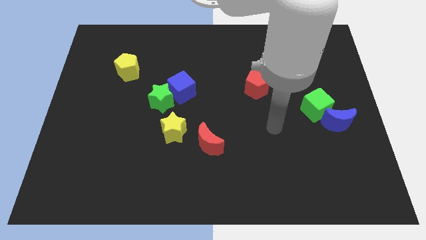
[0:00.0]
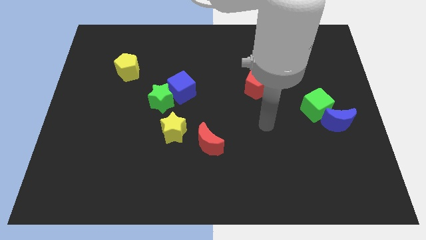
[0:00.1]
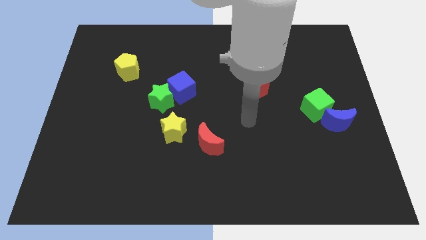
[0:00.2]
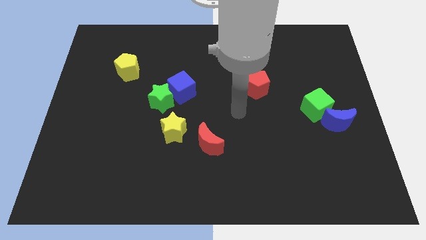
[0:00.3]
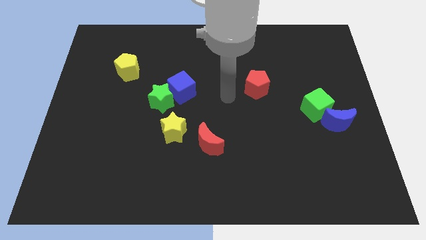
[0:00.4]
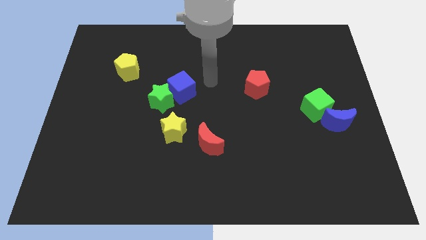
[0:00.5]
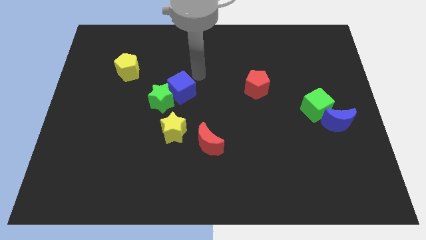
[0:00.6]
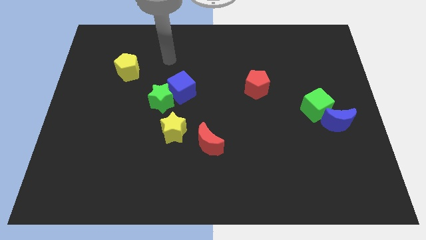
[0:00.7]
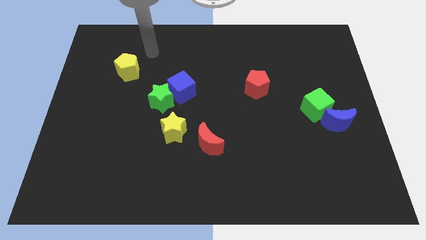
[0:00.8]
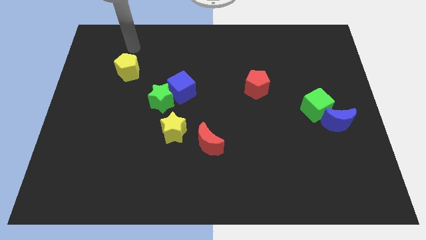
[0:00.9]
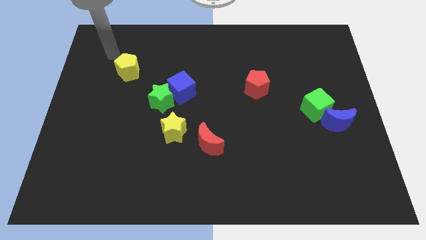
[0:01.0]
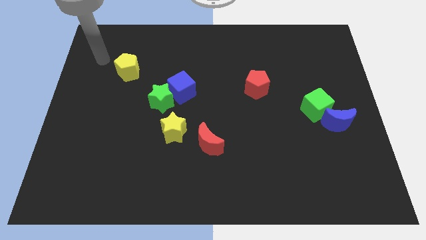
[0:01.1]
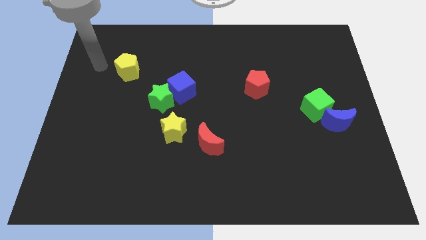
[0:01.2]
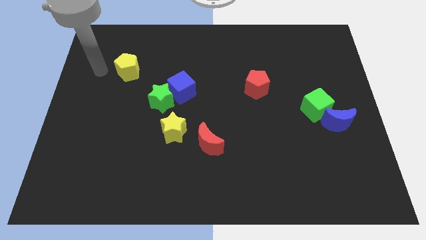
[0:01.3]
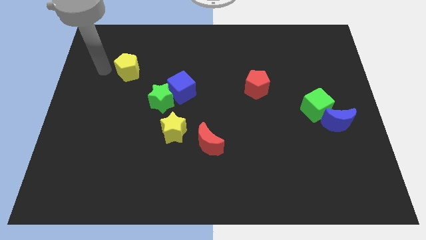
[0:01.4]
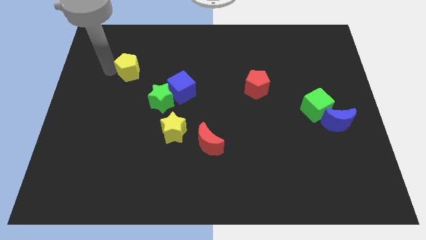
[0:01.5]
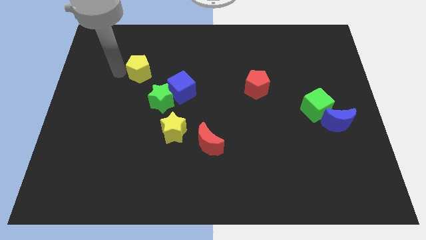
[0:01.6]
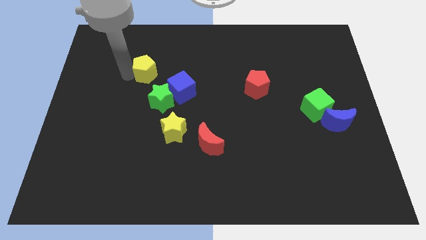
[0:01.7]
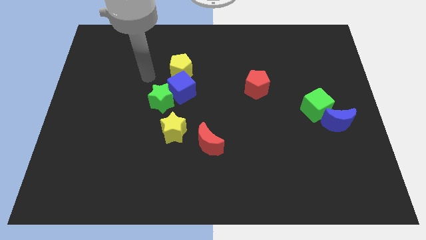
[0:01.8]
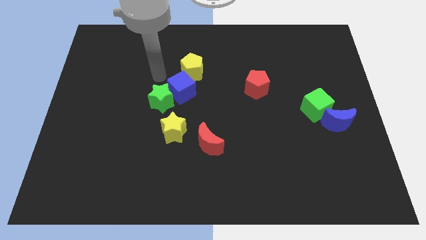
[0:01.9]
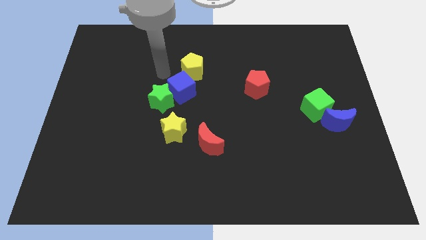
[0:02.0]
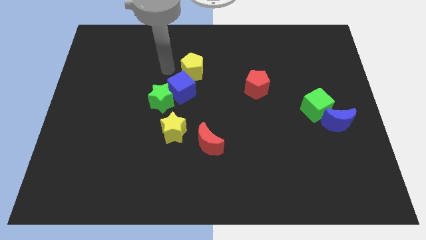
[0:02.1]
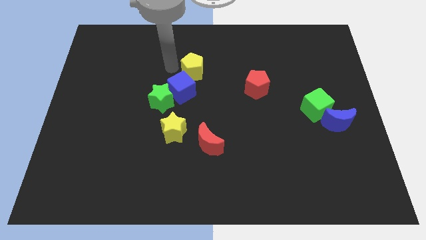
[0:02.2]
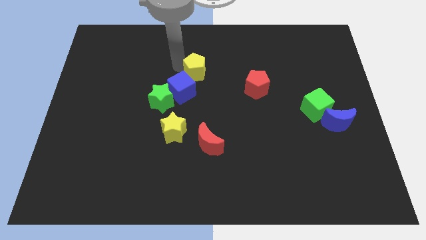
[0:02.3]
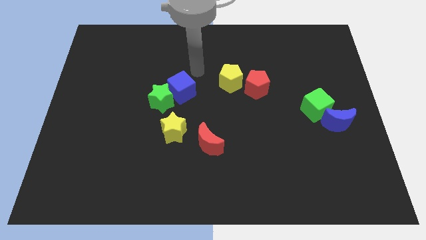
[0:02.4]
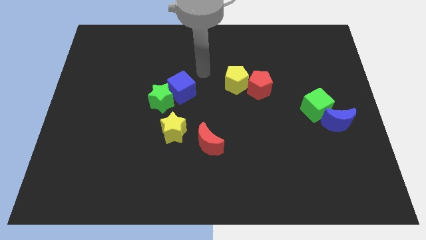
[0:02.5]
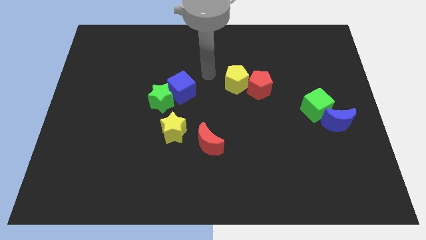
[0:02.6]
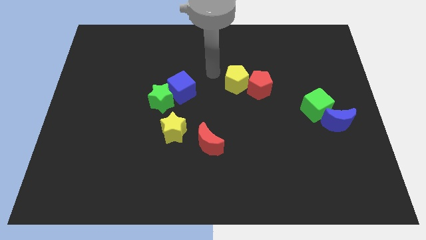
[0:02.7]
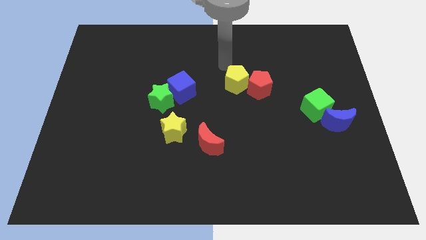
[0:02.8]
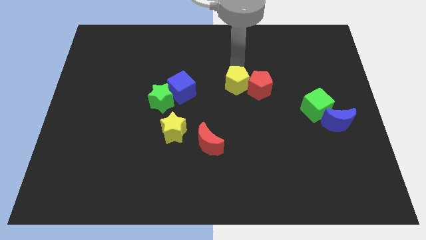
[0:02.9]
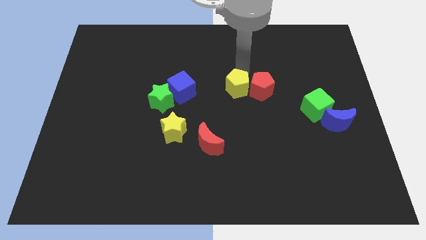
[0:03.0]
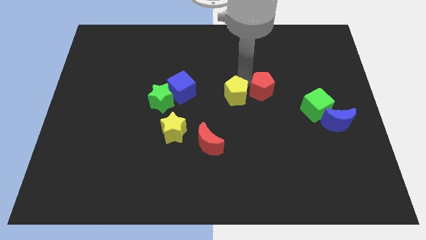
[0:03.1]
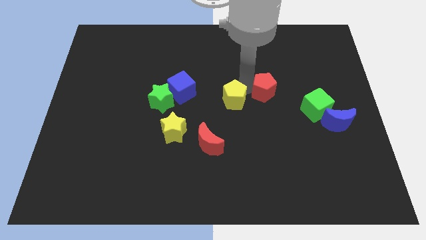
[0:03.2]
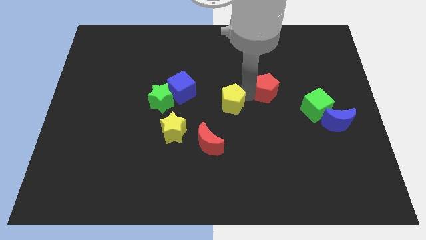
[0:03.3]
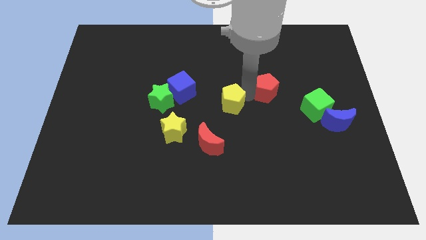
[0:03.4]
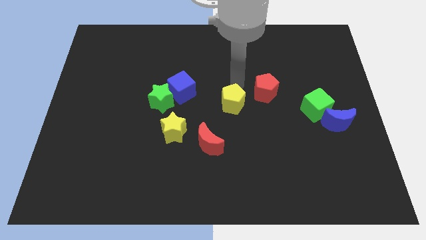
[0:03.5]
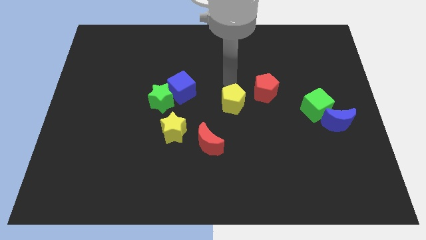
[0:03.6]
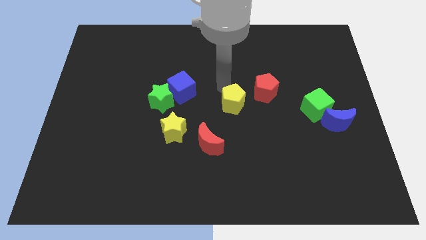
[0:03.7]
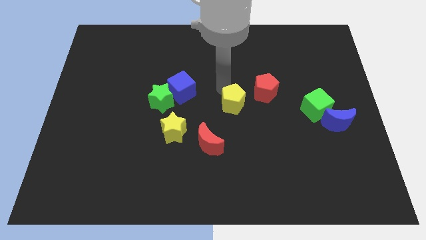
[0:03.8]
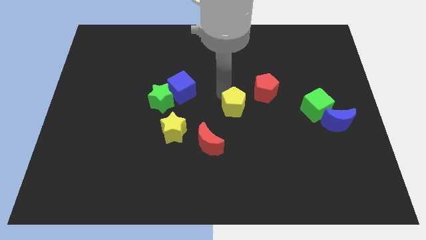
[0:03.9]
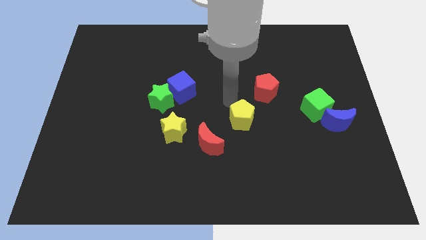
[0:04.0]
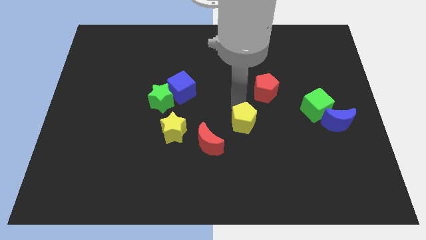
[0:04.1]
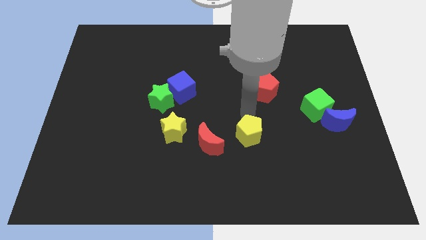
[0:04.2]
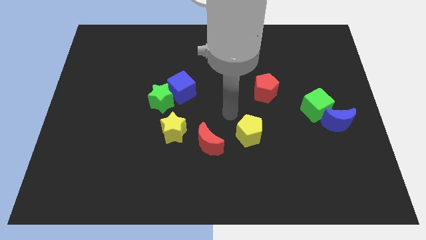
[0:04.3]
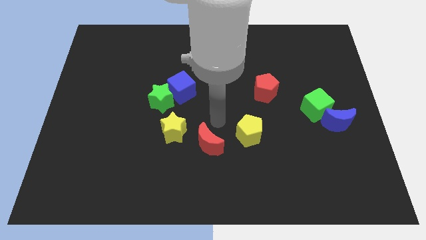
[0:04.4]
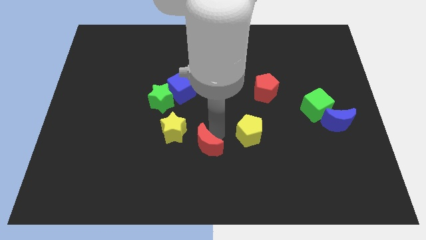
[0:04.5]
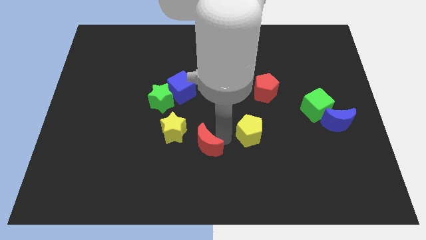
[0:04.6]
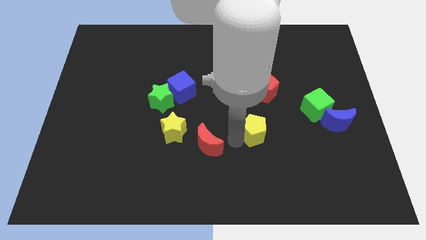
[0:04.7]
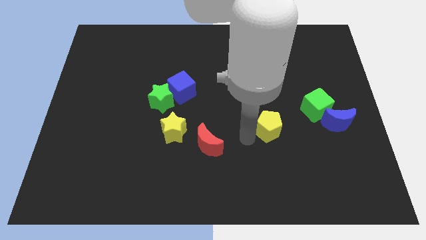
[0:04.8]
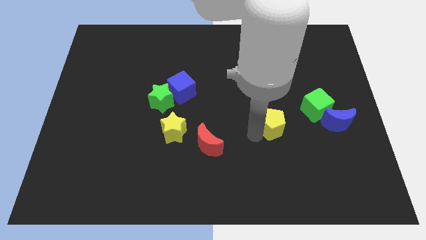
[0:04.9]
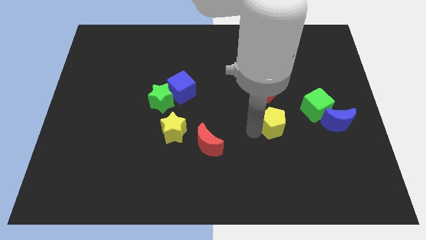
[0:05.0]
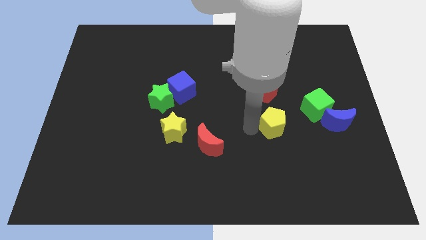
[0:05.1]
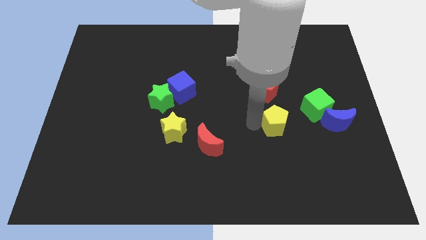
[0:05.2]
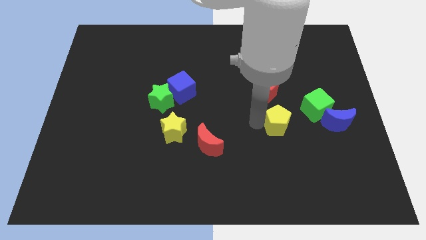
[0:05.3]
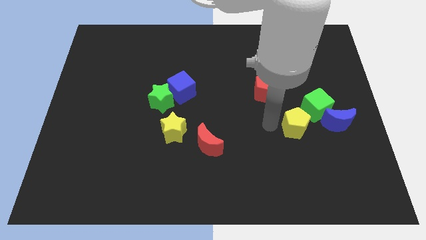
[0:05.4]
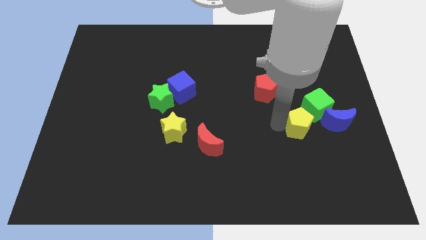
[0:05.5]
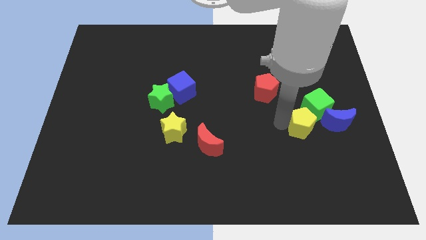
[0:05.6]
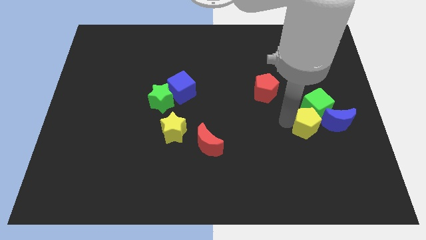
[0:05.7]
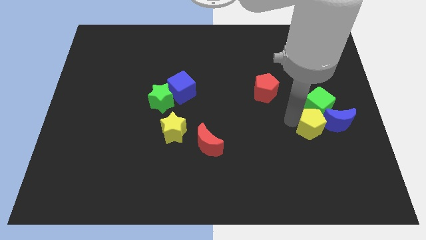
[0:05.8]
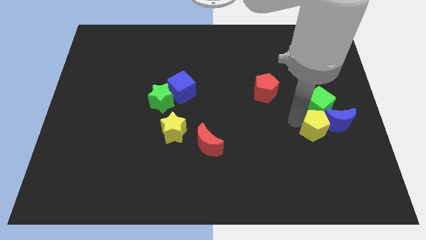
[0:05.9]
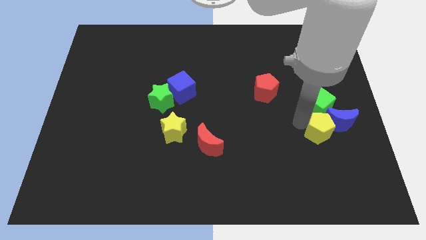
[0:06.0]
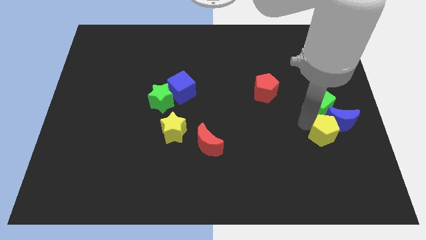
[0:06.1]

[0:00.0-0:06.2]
move the yellow pentagon next to the blue moon

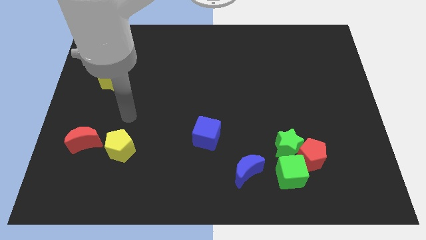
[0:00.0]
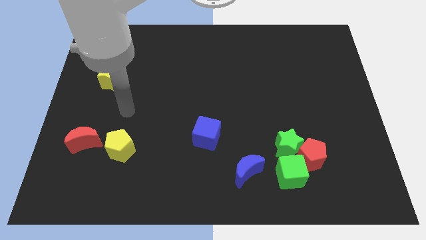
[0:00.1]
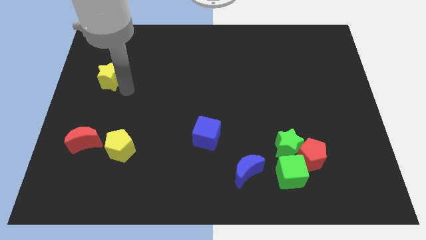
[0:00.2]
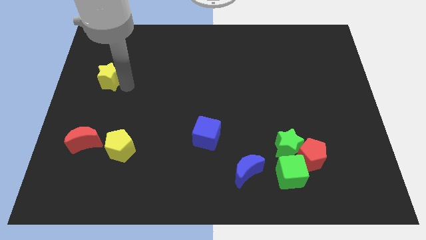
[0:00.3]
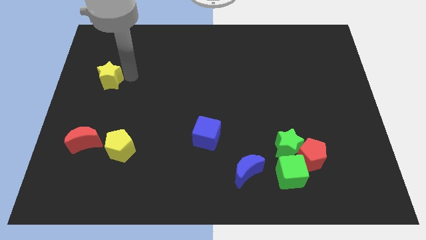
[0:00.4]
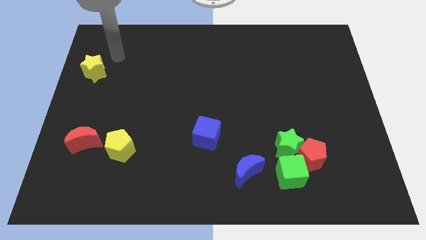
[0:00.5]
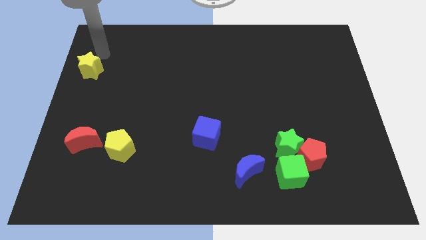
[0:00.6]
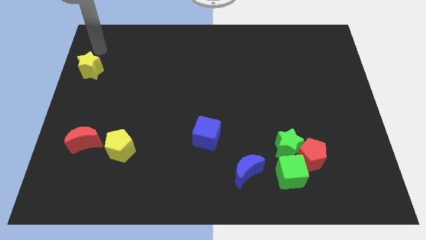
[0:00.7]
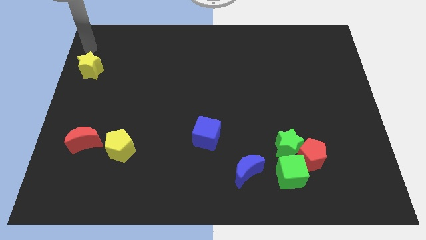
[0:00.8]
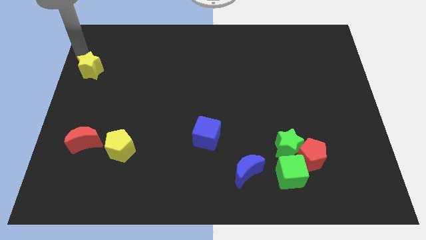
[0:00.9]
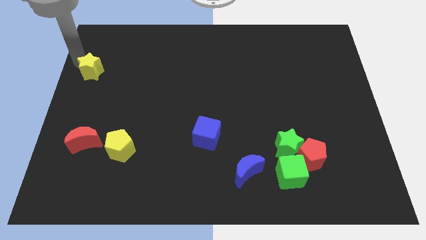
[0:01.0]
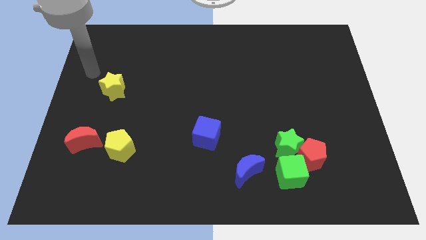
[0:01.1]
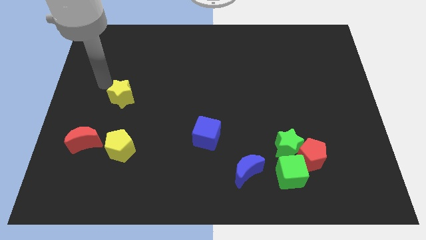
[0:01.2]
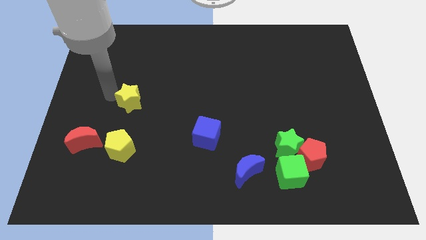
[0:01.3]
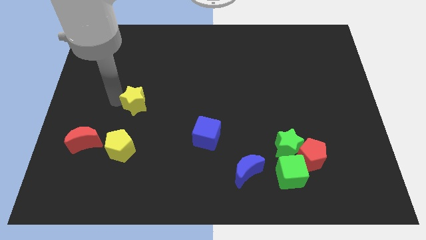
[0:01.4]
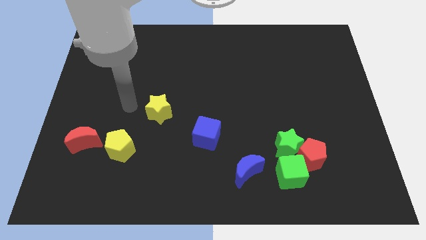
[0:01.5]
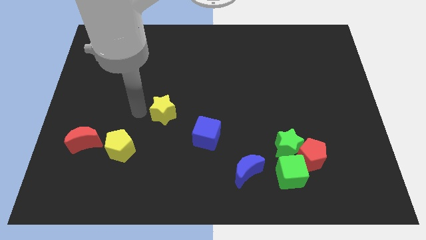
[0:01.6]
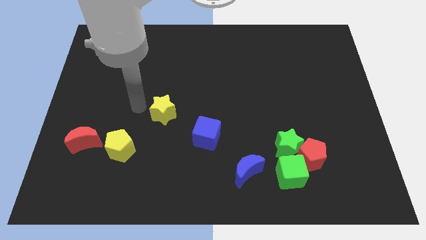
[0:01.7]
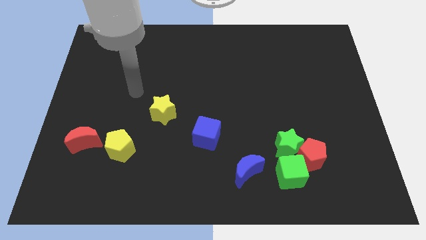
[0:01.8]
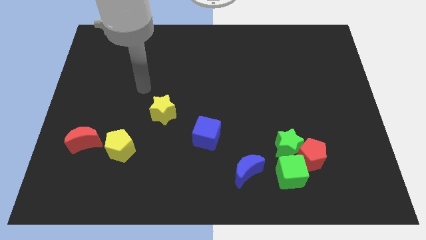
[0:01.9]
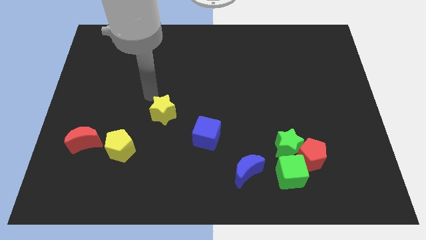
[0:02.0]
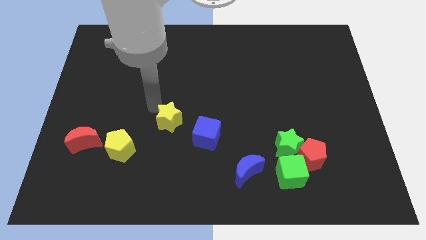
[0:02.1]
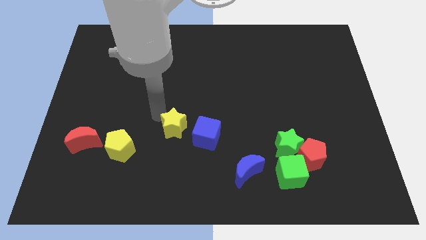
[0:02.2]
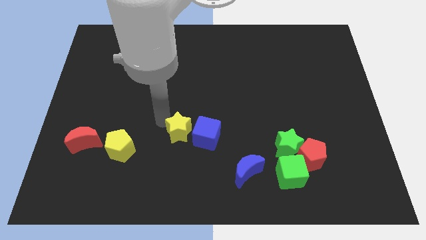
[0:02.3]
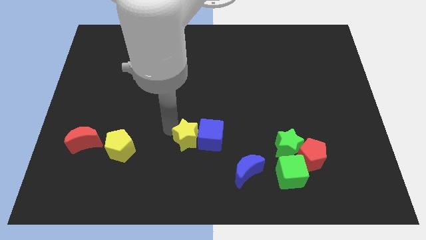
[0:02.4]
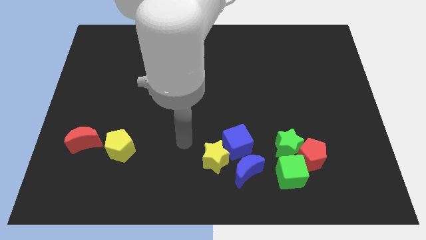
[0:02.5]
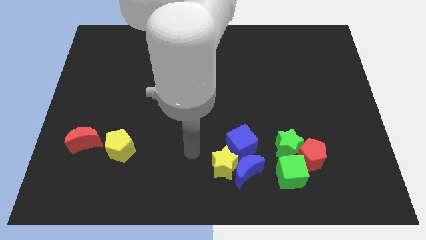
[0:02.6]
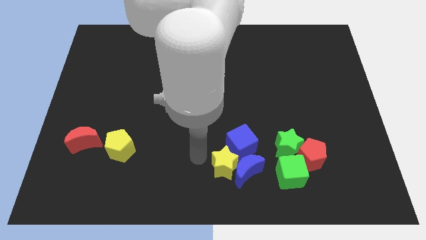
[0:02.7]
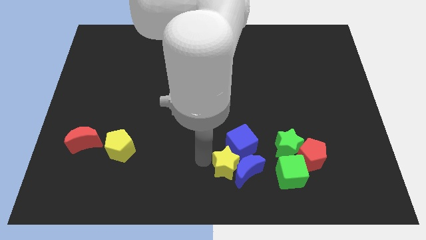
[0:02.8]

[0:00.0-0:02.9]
push the yellow star next to the blue moon
